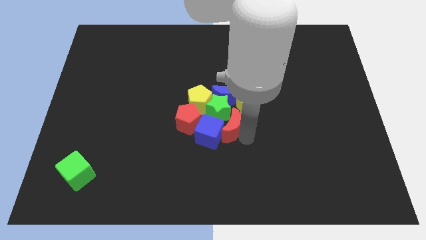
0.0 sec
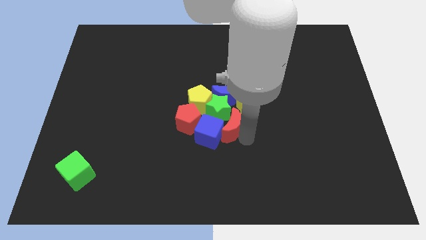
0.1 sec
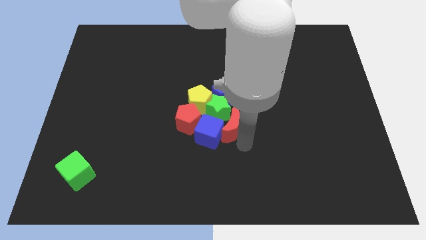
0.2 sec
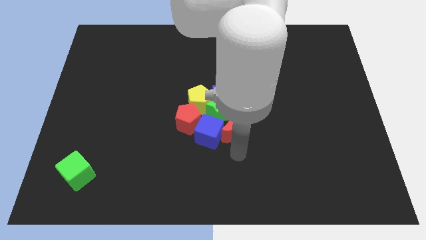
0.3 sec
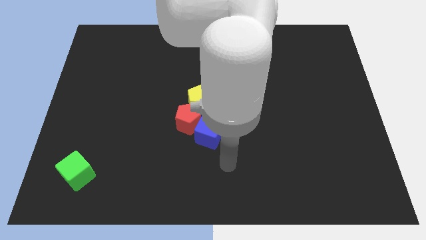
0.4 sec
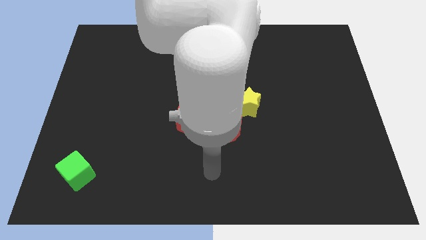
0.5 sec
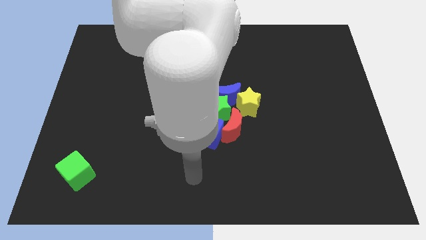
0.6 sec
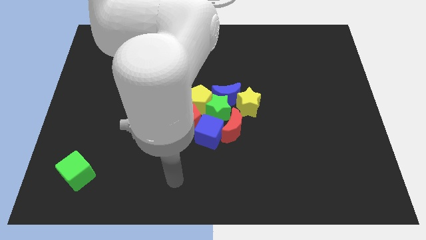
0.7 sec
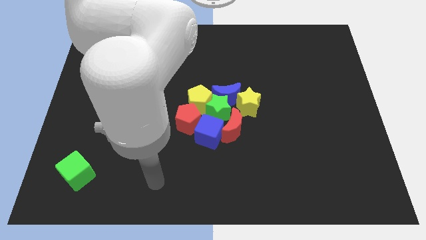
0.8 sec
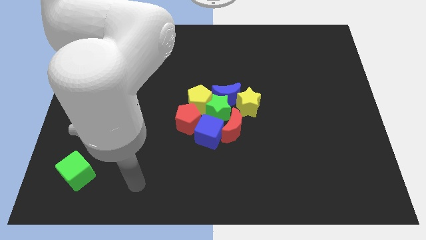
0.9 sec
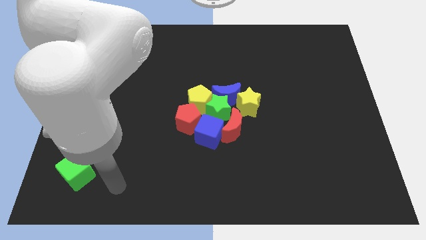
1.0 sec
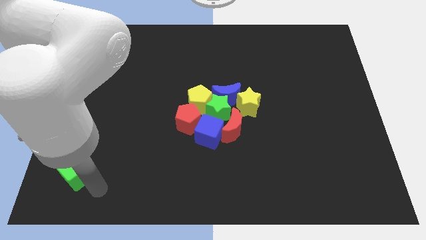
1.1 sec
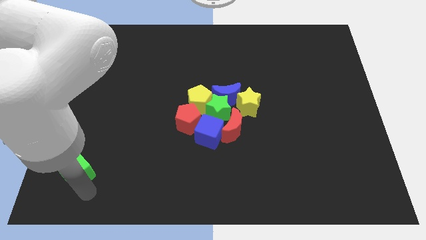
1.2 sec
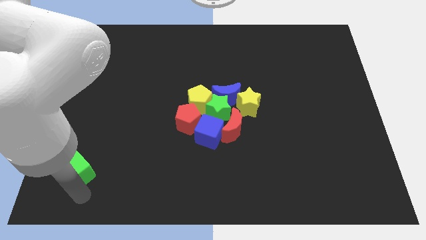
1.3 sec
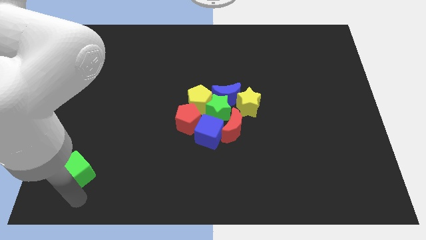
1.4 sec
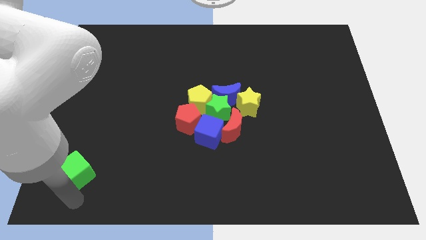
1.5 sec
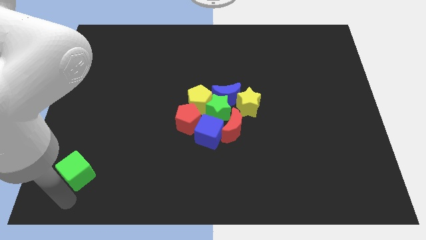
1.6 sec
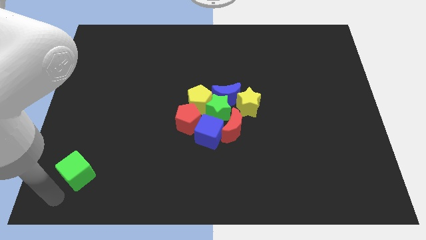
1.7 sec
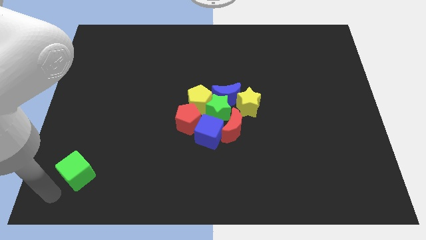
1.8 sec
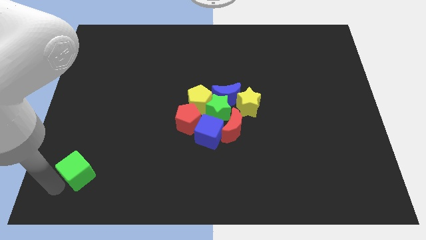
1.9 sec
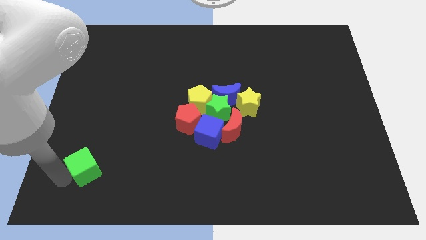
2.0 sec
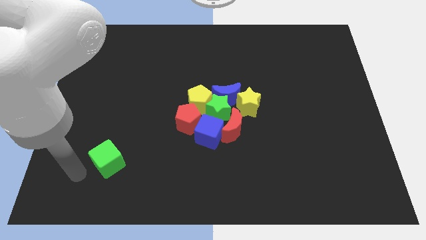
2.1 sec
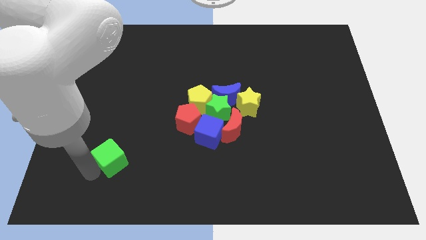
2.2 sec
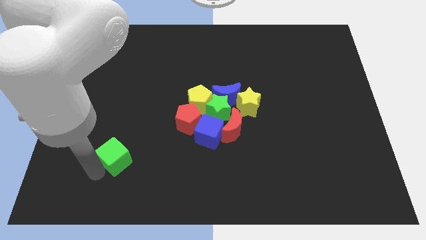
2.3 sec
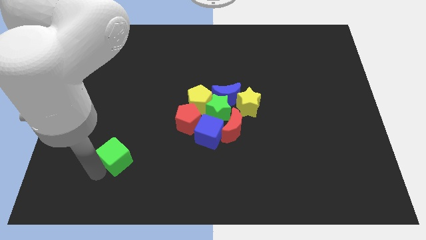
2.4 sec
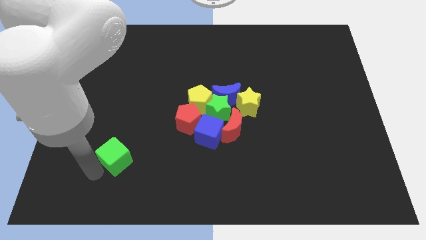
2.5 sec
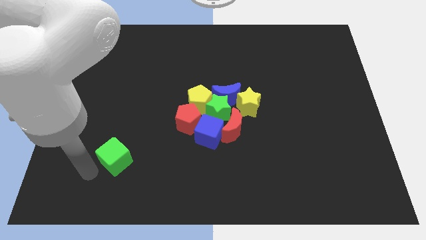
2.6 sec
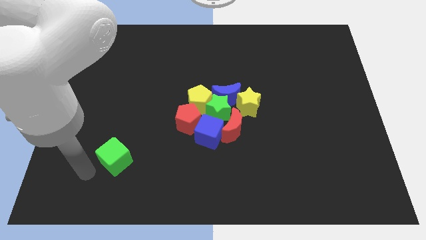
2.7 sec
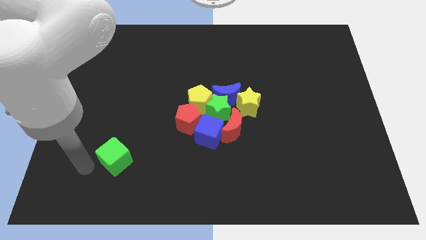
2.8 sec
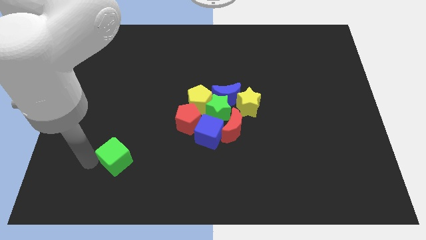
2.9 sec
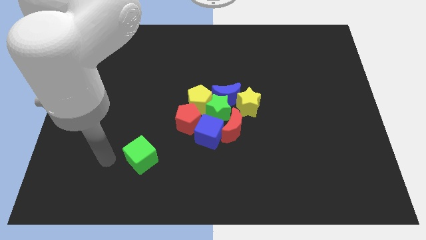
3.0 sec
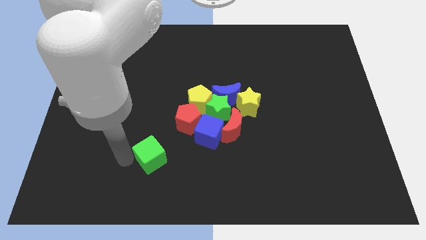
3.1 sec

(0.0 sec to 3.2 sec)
push the green cube towards the red pentagon

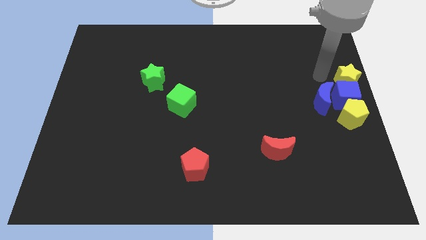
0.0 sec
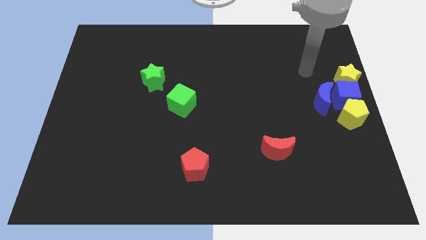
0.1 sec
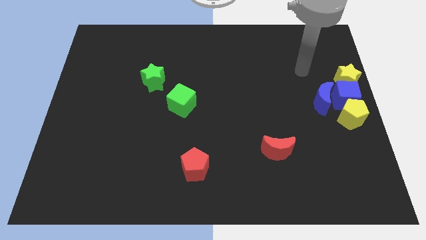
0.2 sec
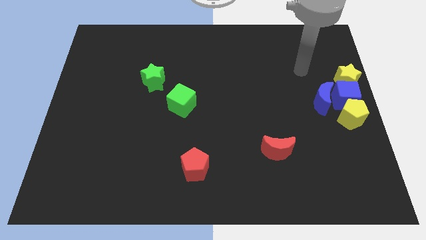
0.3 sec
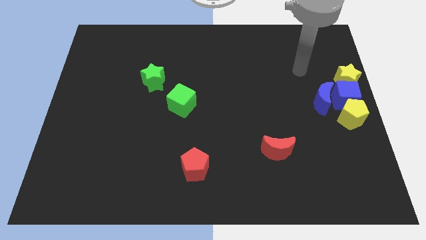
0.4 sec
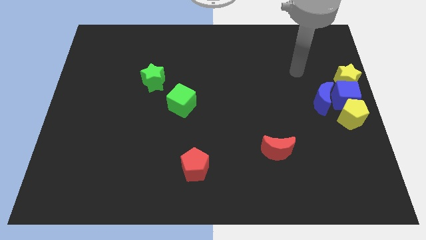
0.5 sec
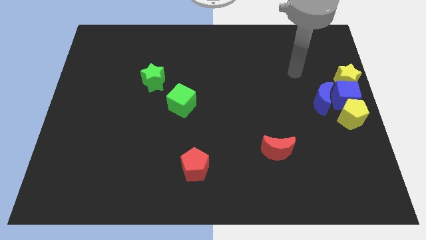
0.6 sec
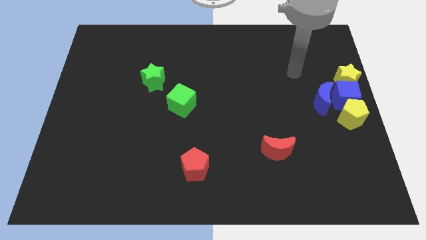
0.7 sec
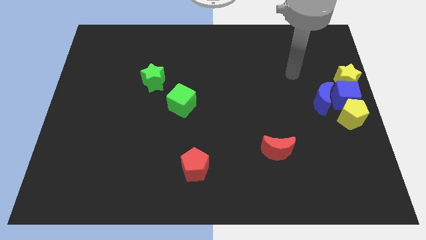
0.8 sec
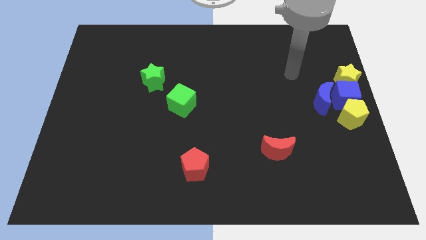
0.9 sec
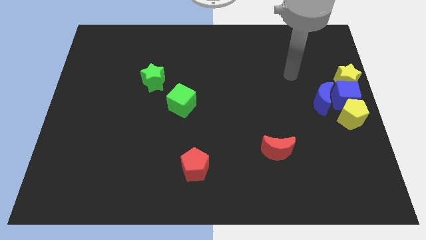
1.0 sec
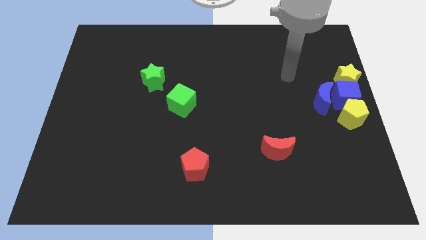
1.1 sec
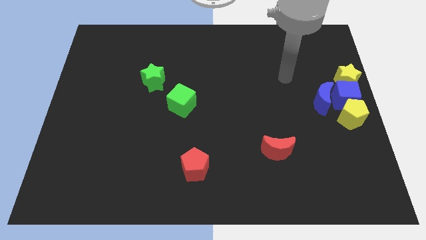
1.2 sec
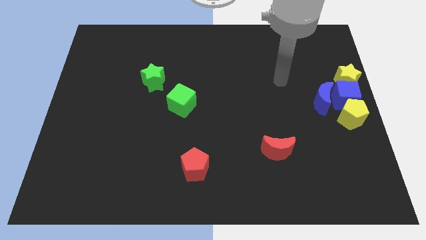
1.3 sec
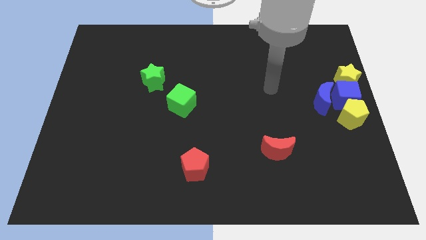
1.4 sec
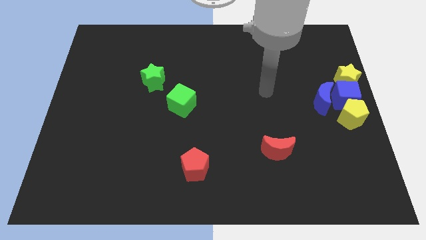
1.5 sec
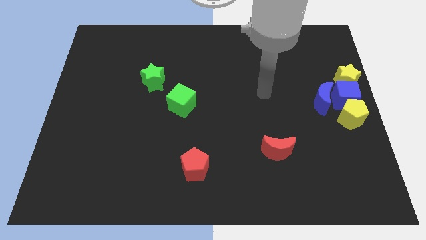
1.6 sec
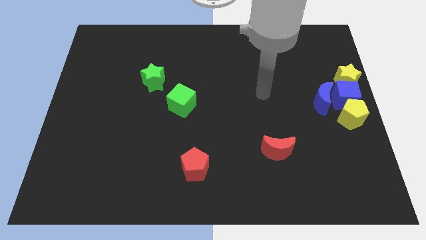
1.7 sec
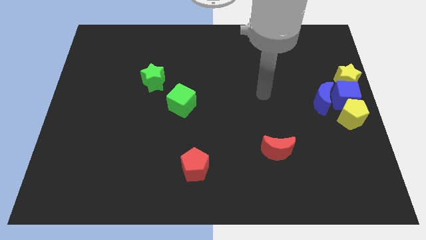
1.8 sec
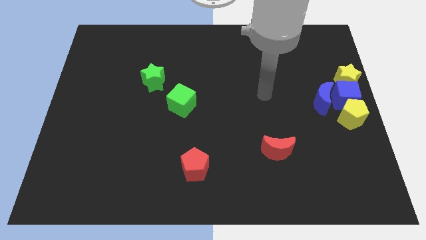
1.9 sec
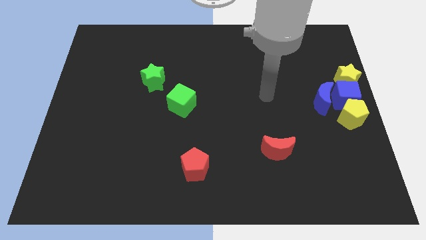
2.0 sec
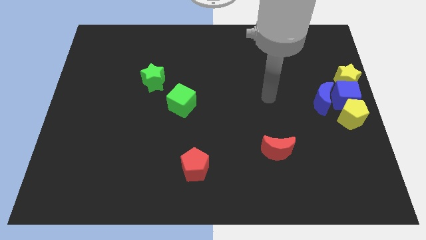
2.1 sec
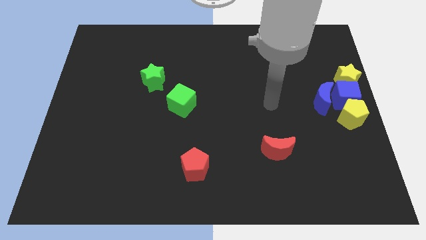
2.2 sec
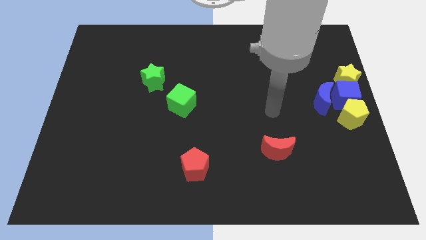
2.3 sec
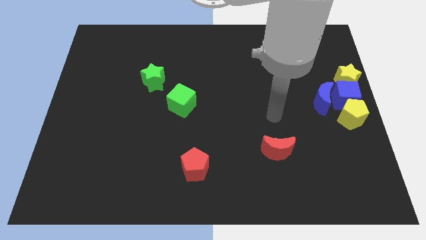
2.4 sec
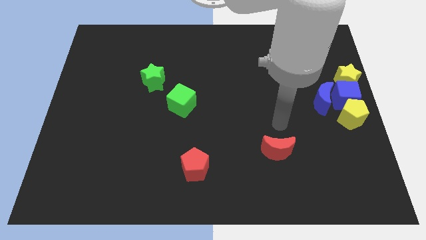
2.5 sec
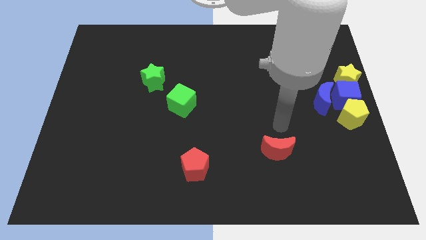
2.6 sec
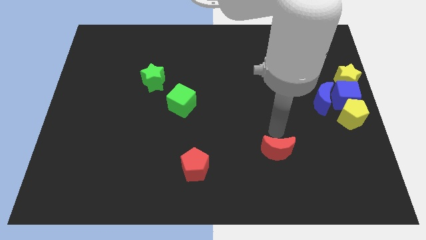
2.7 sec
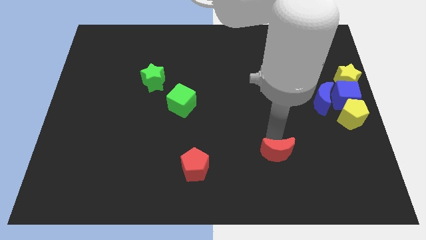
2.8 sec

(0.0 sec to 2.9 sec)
touch the top side of the red crescent

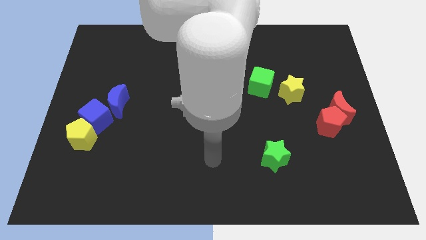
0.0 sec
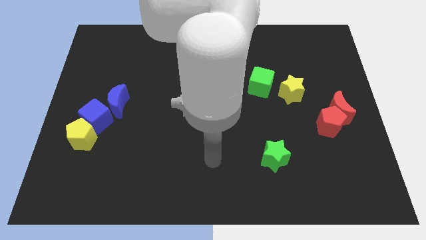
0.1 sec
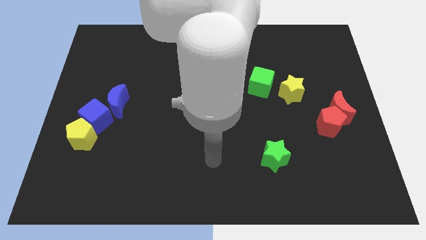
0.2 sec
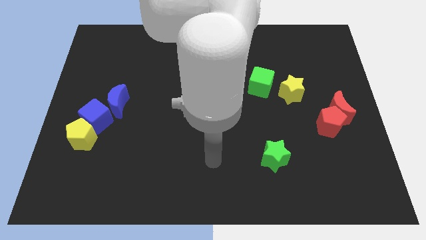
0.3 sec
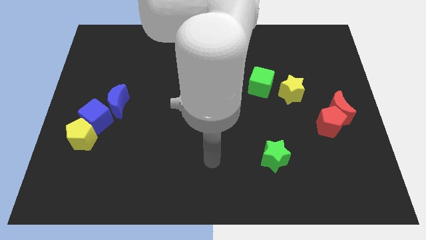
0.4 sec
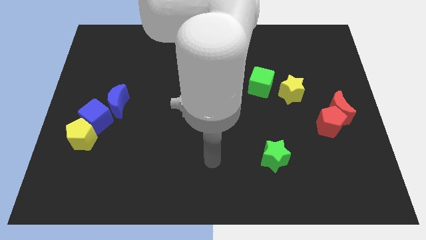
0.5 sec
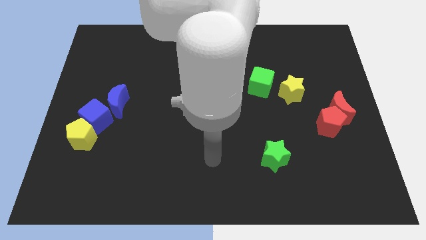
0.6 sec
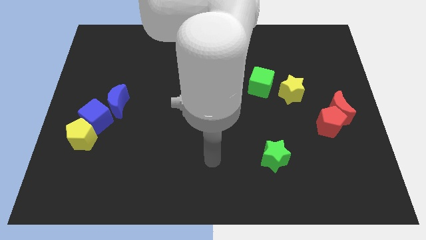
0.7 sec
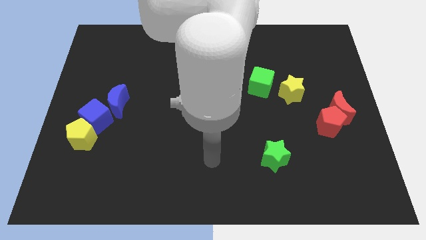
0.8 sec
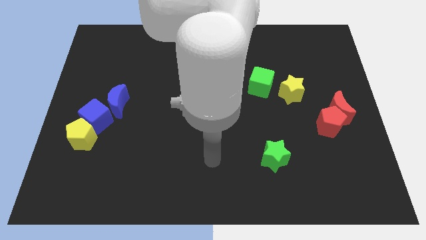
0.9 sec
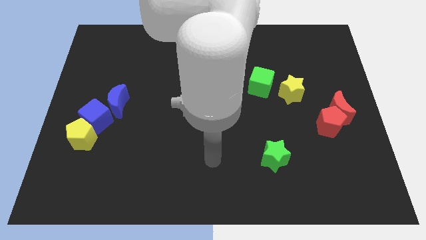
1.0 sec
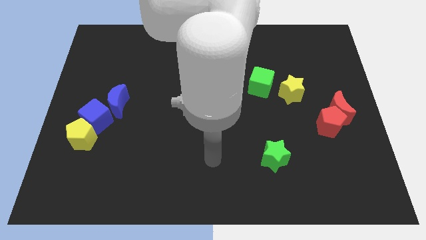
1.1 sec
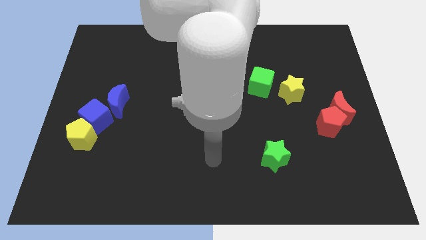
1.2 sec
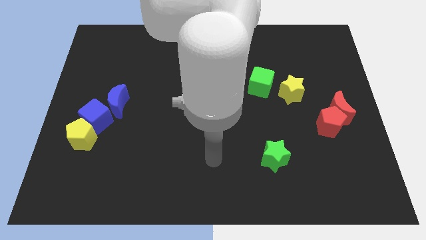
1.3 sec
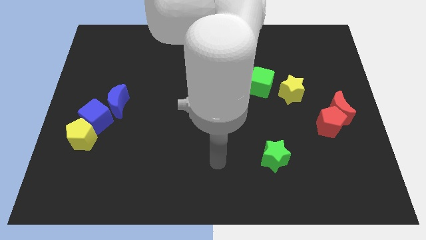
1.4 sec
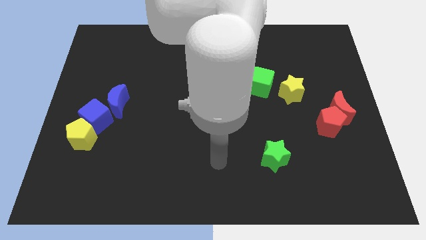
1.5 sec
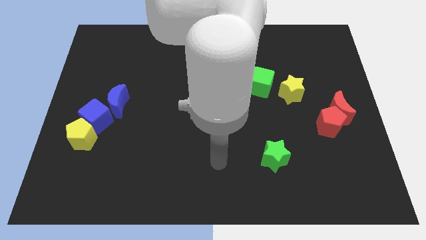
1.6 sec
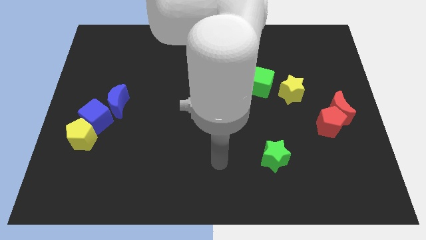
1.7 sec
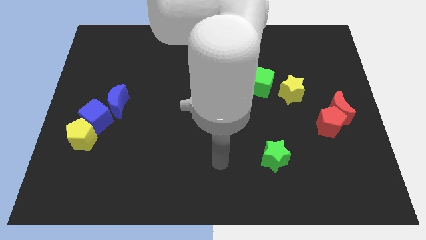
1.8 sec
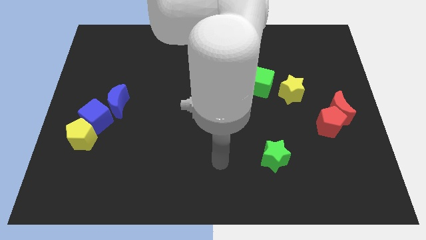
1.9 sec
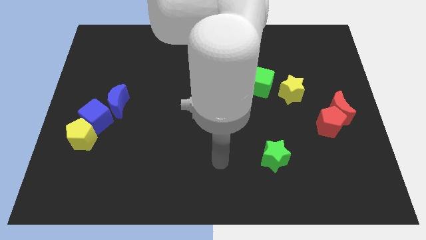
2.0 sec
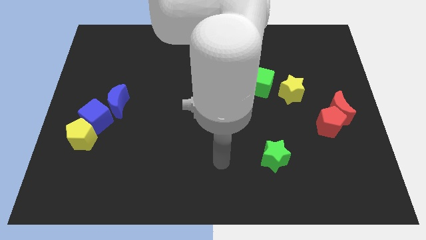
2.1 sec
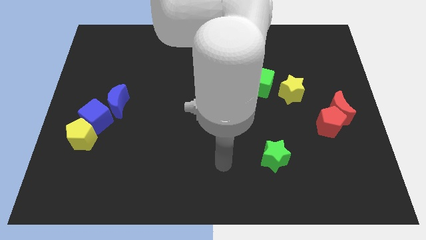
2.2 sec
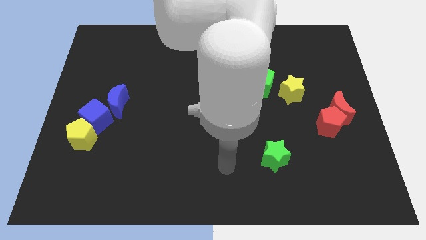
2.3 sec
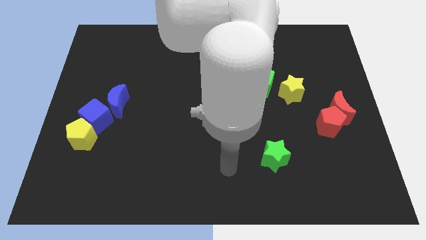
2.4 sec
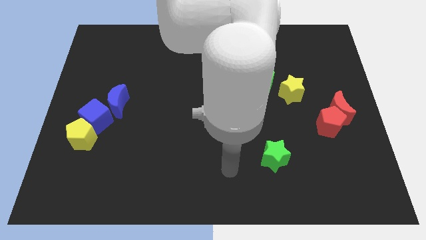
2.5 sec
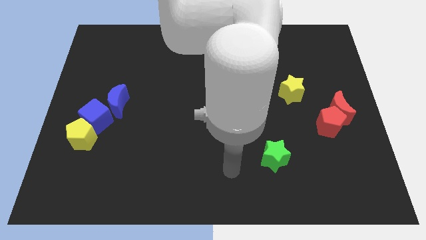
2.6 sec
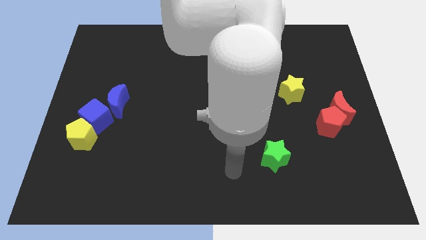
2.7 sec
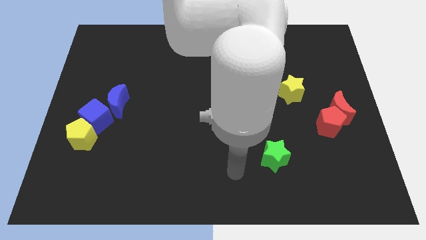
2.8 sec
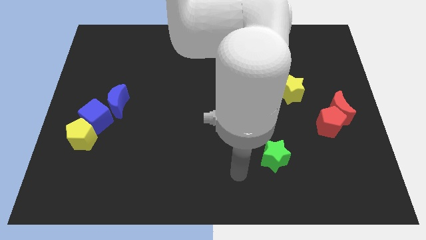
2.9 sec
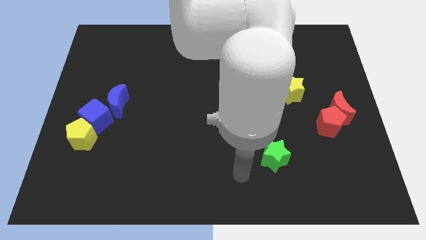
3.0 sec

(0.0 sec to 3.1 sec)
move your arm to the bottom center of the board
